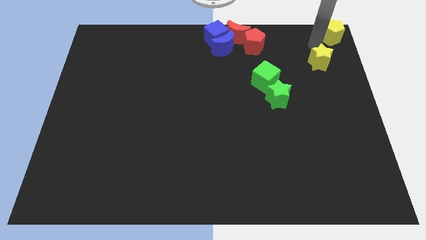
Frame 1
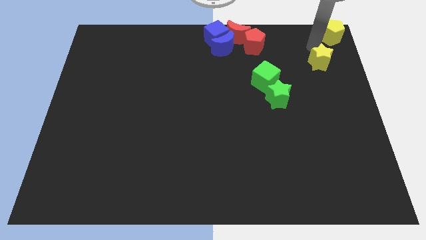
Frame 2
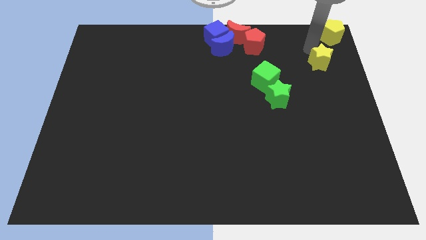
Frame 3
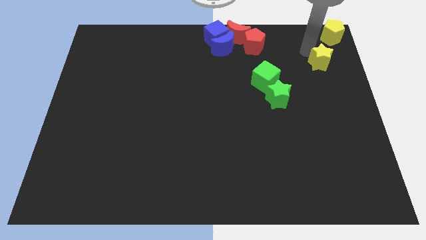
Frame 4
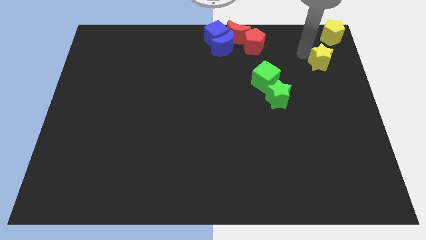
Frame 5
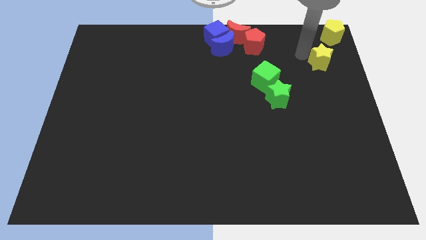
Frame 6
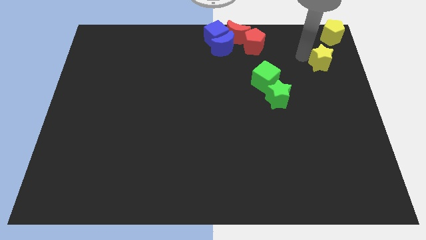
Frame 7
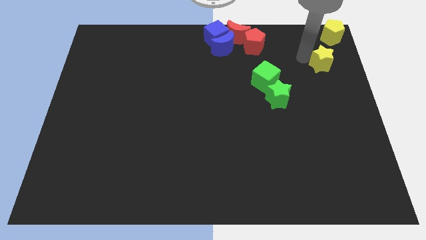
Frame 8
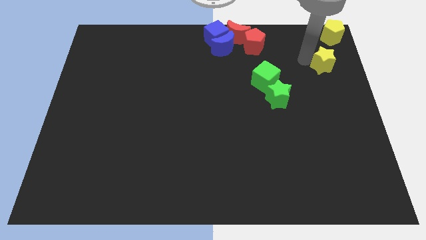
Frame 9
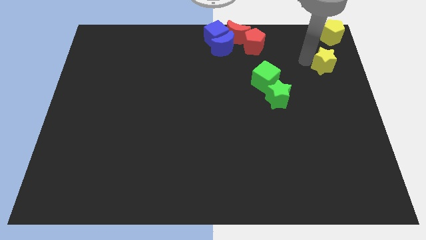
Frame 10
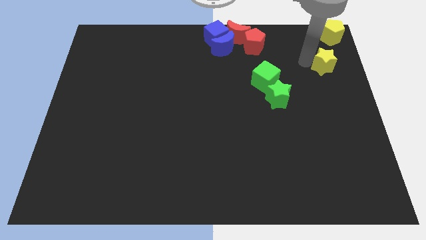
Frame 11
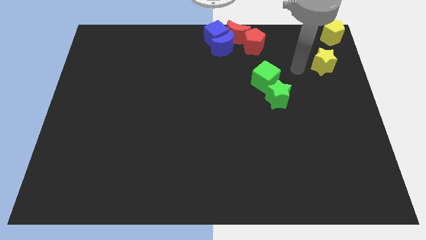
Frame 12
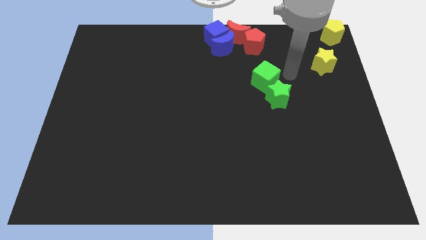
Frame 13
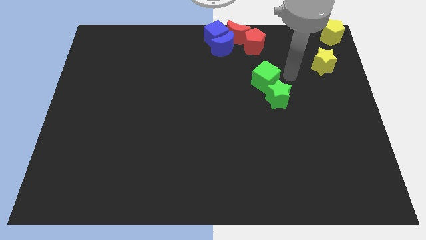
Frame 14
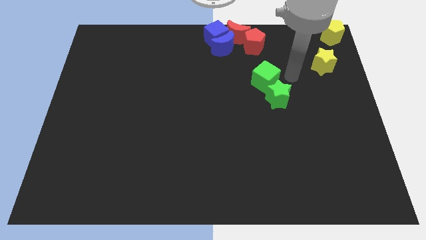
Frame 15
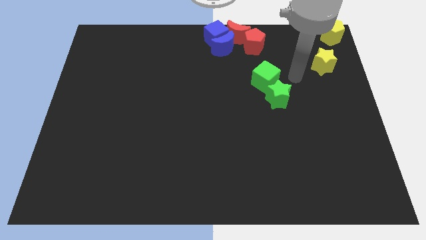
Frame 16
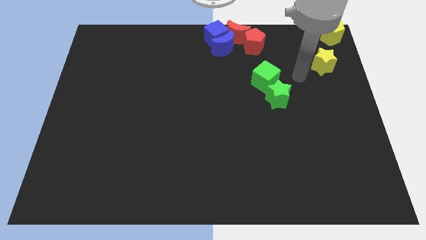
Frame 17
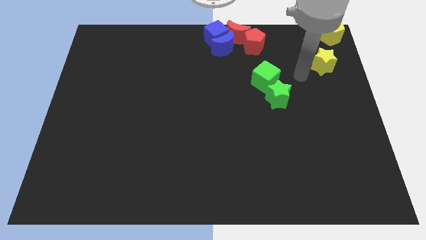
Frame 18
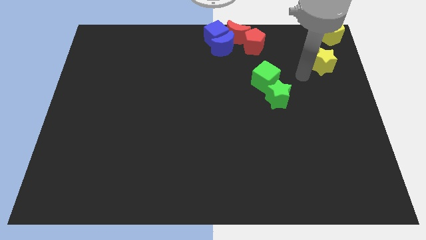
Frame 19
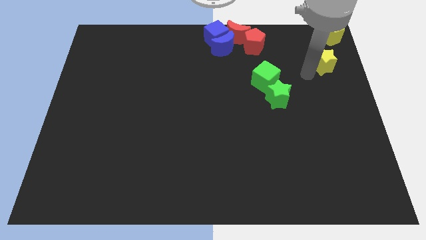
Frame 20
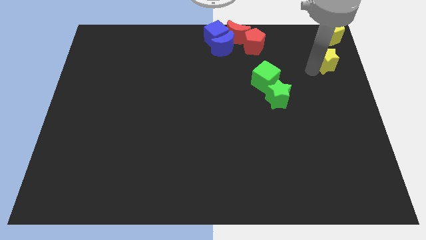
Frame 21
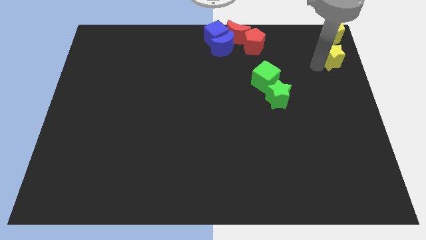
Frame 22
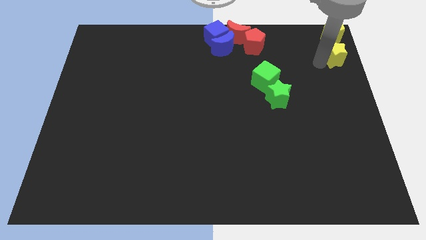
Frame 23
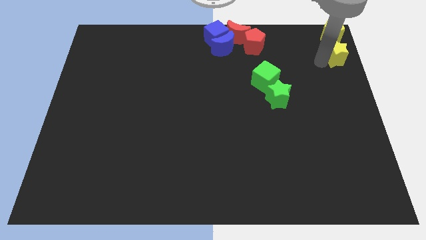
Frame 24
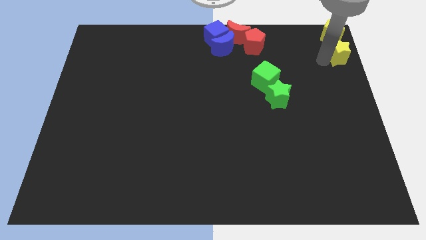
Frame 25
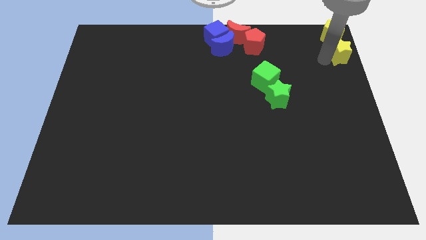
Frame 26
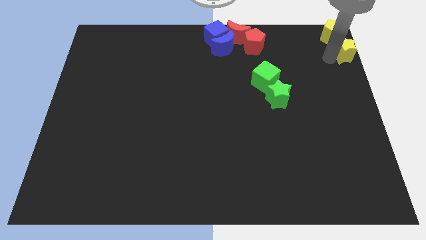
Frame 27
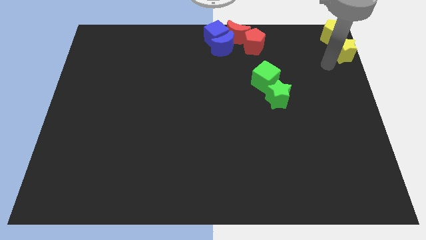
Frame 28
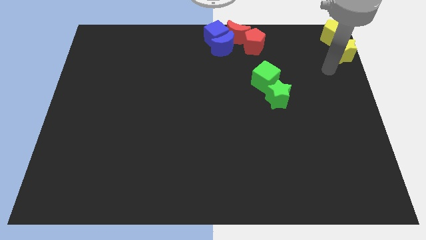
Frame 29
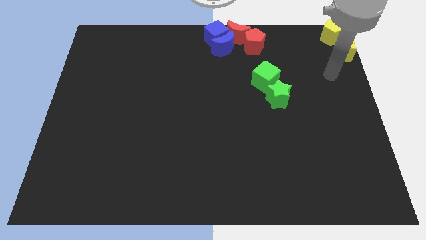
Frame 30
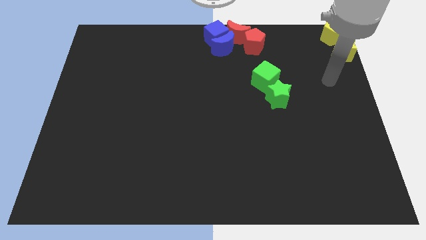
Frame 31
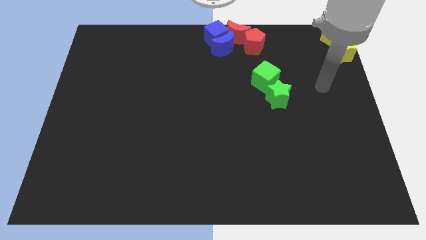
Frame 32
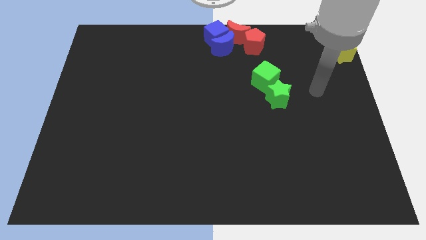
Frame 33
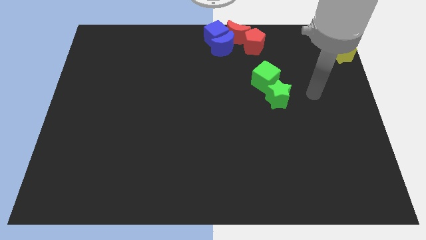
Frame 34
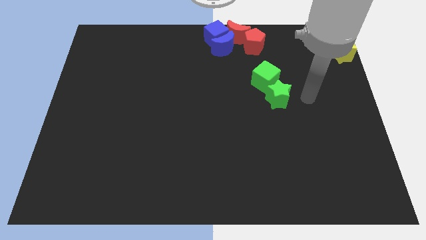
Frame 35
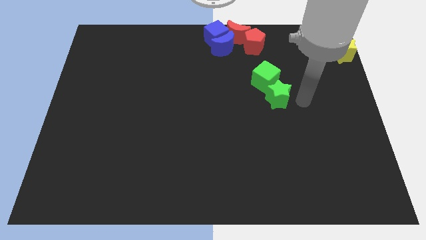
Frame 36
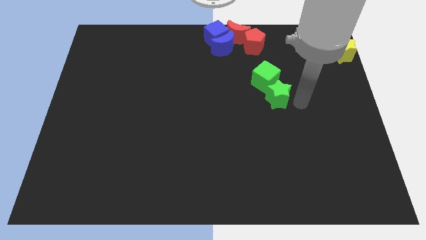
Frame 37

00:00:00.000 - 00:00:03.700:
move the yellow star below the yellow pentagon

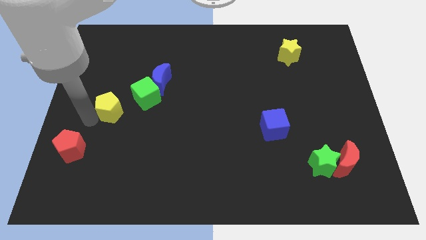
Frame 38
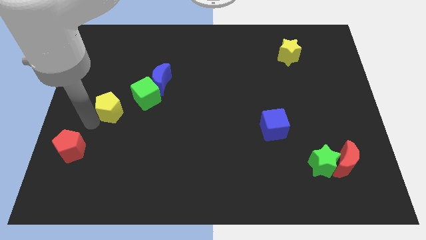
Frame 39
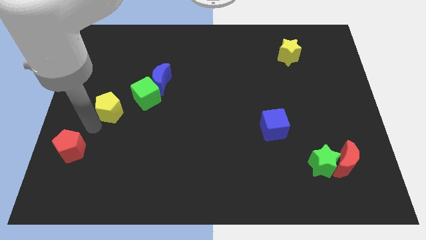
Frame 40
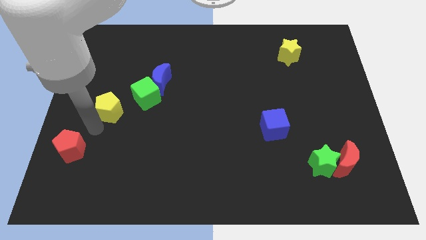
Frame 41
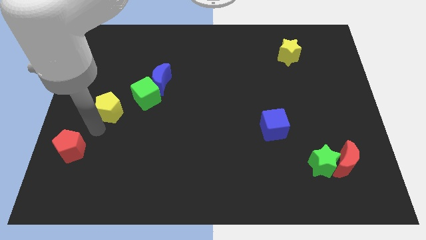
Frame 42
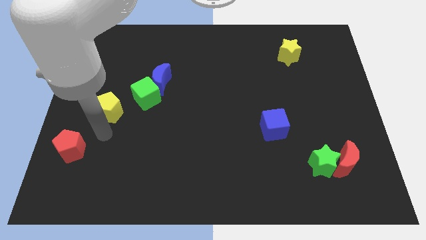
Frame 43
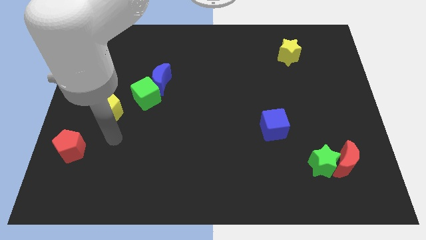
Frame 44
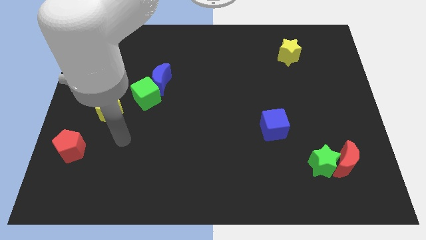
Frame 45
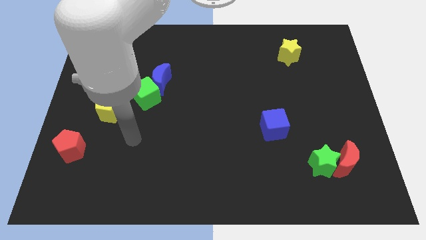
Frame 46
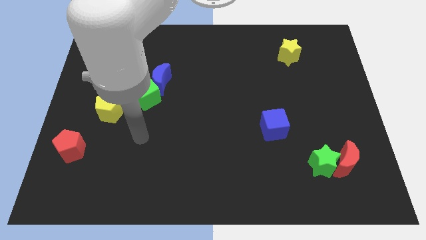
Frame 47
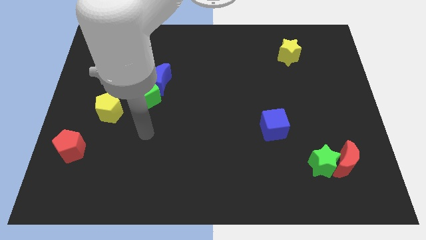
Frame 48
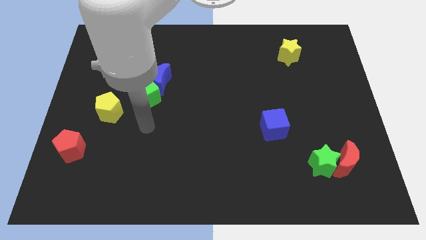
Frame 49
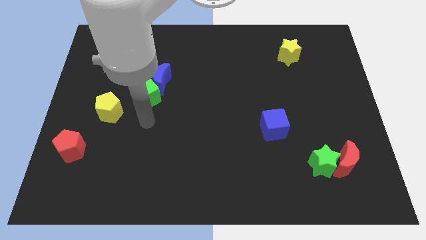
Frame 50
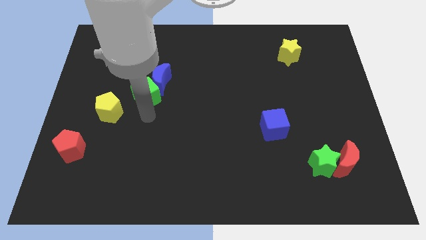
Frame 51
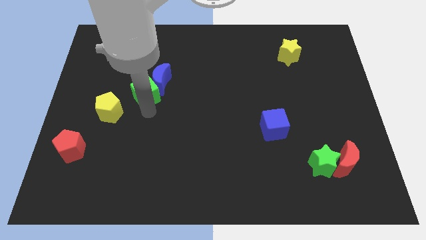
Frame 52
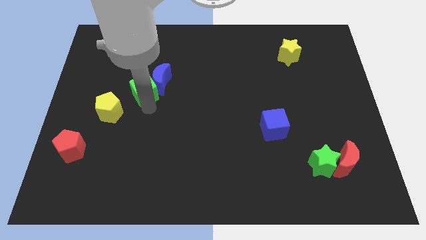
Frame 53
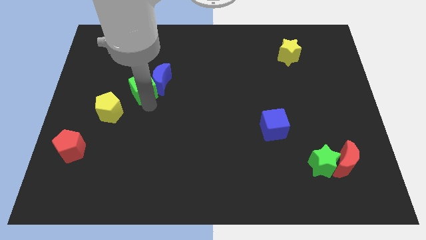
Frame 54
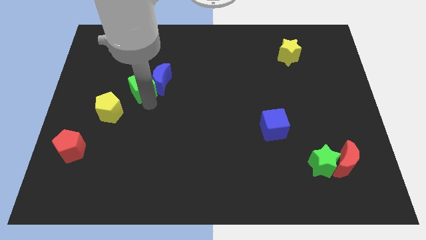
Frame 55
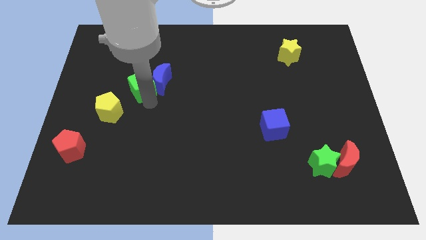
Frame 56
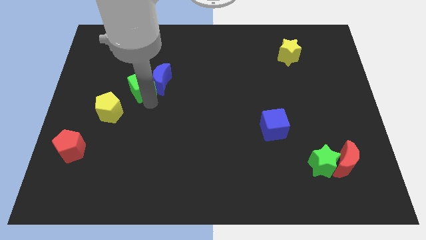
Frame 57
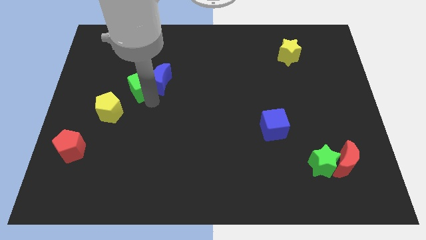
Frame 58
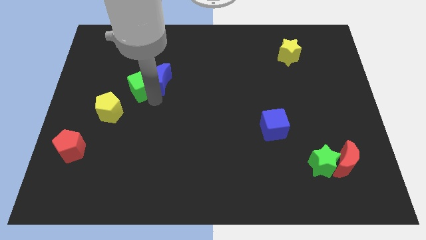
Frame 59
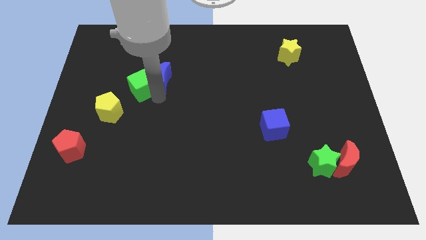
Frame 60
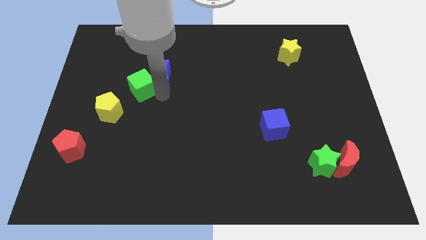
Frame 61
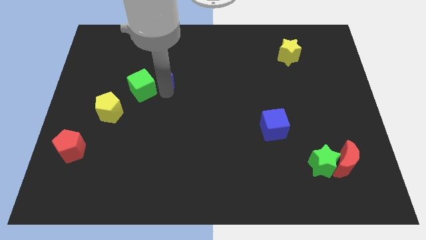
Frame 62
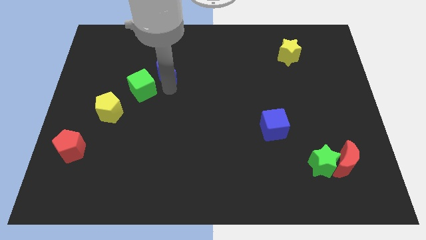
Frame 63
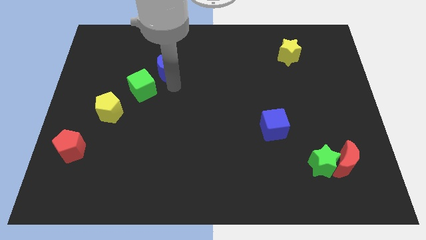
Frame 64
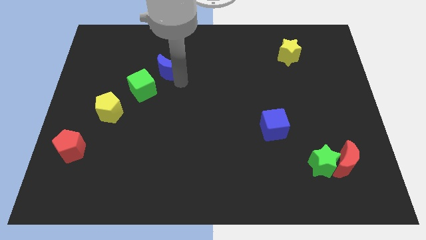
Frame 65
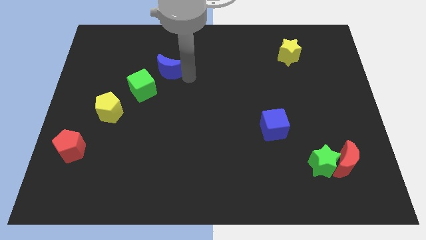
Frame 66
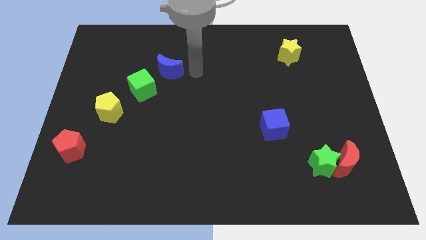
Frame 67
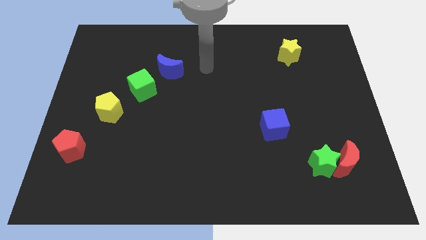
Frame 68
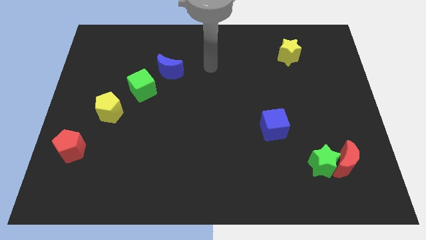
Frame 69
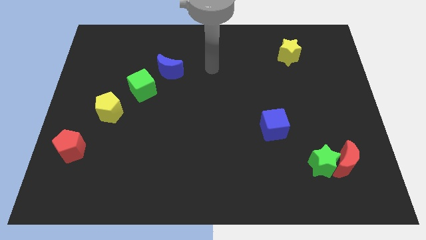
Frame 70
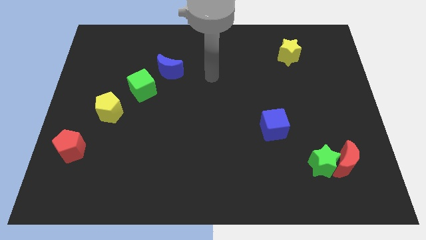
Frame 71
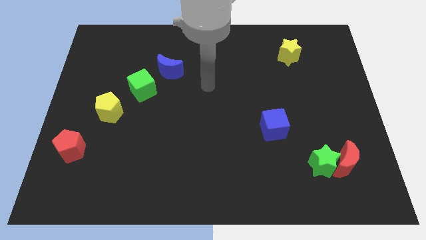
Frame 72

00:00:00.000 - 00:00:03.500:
touch the bottom of green cube and blue moon

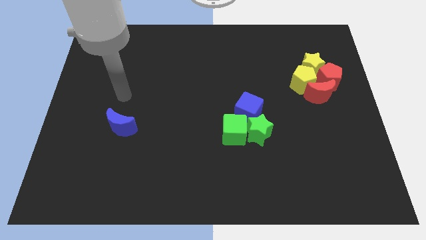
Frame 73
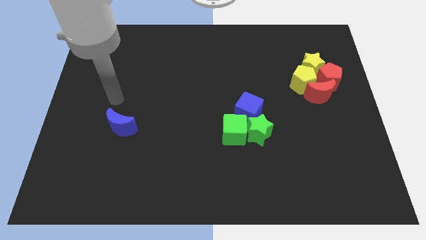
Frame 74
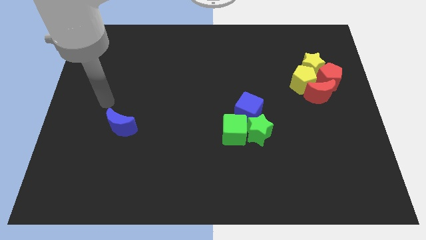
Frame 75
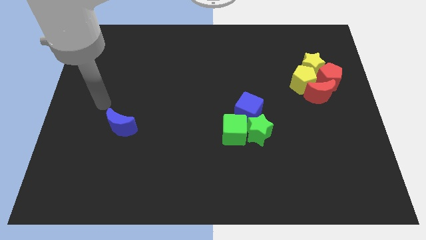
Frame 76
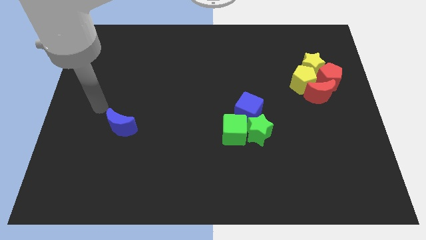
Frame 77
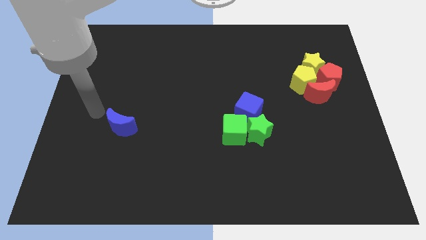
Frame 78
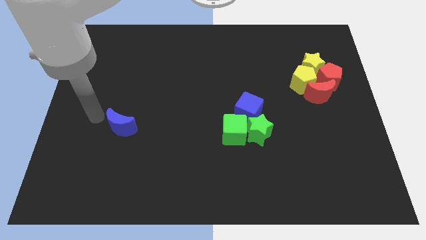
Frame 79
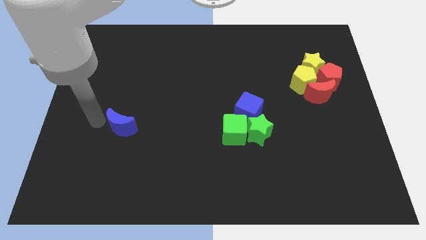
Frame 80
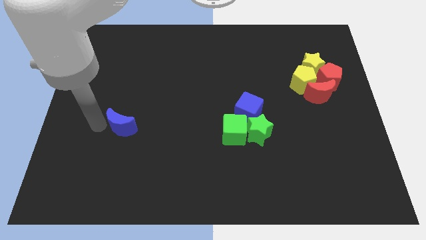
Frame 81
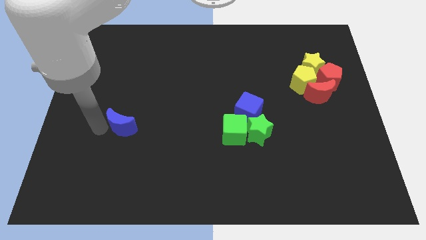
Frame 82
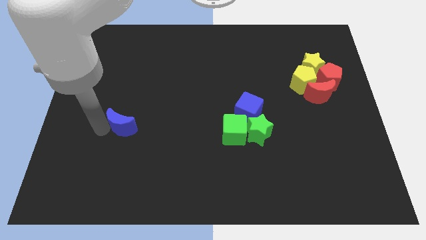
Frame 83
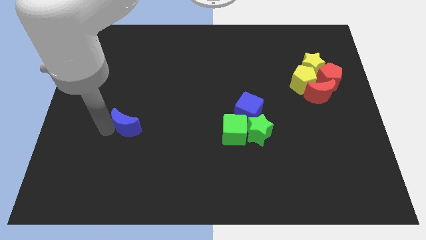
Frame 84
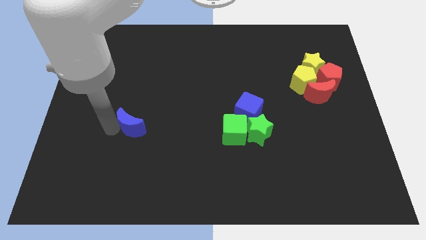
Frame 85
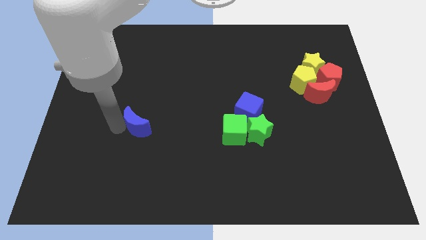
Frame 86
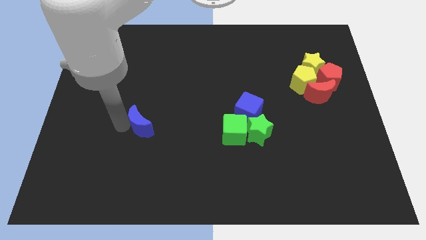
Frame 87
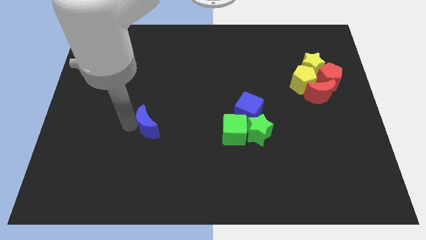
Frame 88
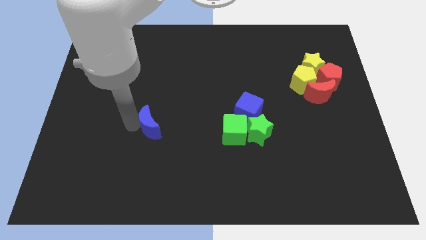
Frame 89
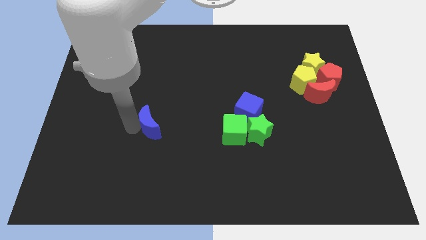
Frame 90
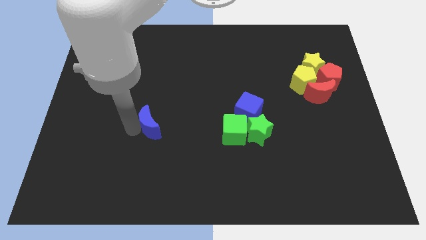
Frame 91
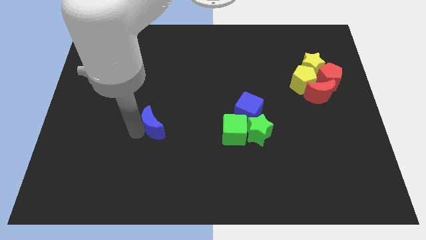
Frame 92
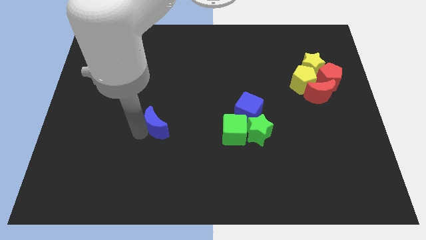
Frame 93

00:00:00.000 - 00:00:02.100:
slightly move the blue moon towards the center
